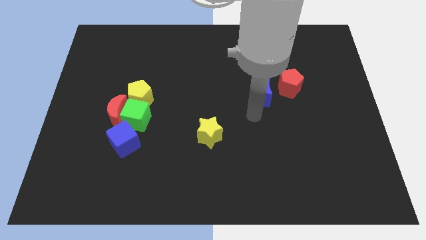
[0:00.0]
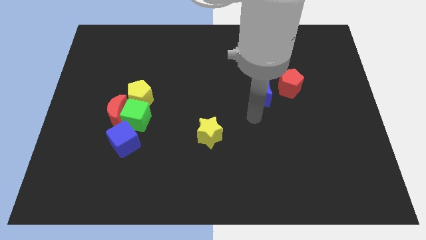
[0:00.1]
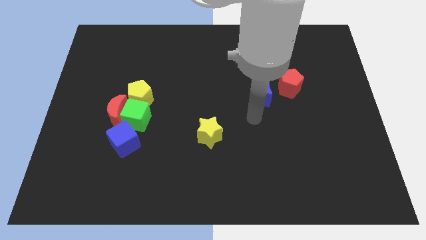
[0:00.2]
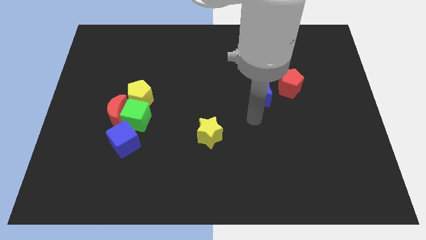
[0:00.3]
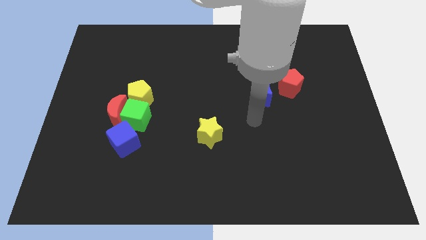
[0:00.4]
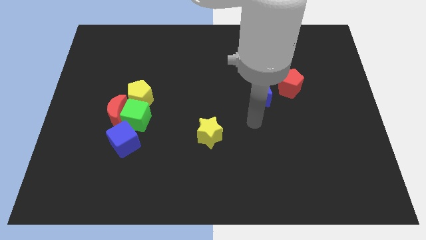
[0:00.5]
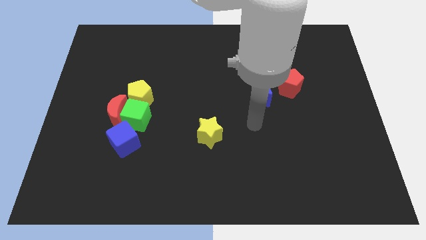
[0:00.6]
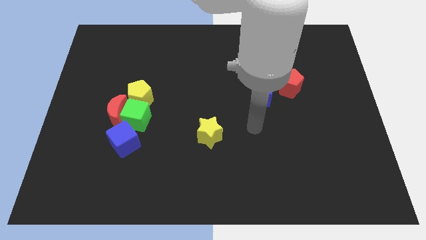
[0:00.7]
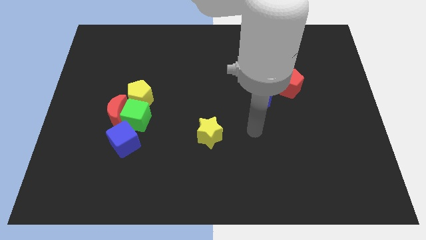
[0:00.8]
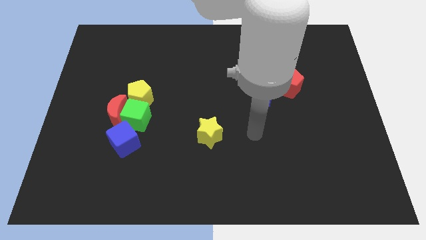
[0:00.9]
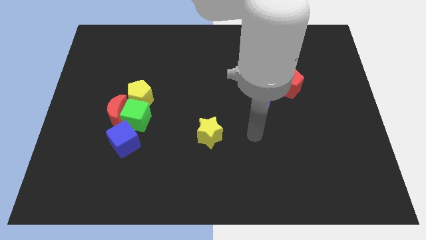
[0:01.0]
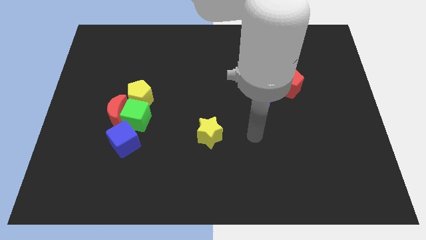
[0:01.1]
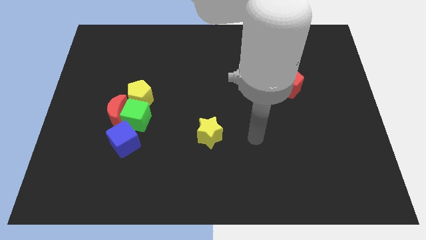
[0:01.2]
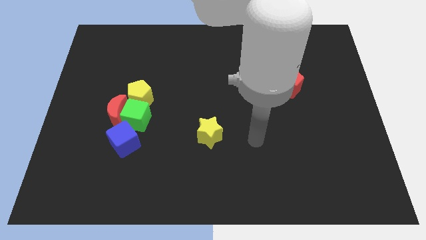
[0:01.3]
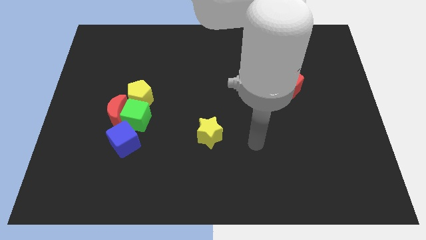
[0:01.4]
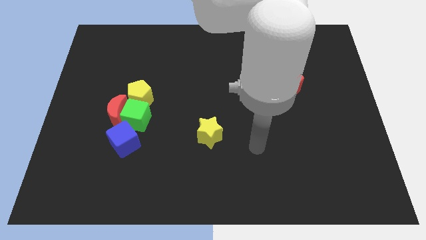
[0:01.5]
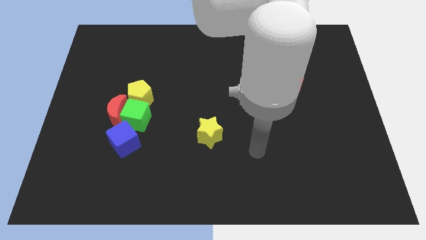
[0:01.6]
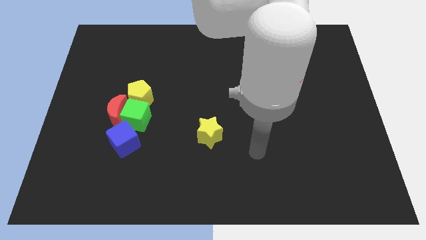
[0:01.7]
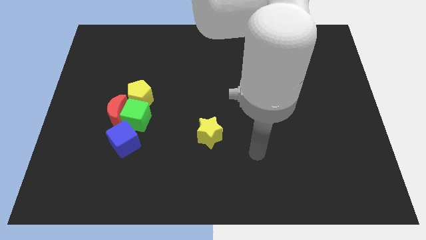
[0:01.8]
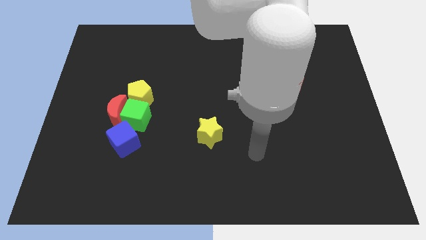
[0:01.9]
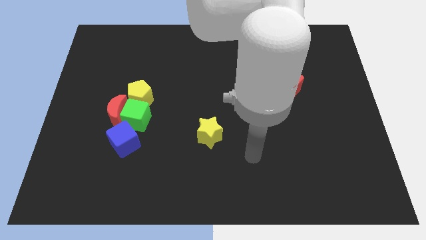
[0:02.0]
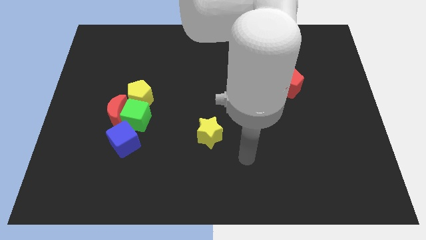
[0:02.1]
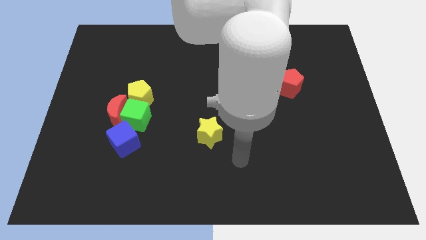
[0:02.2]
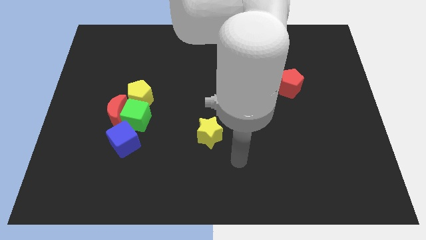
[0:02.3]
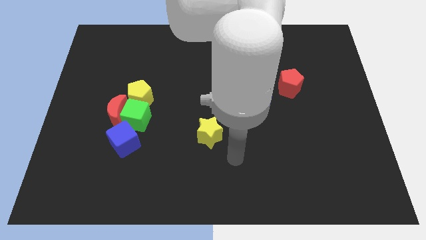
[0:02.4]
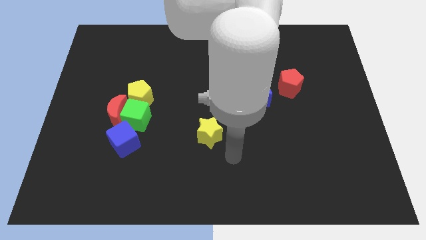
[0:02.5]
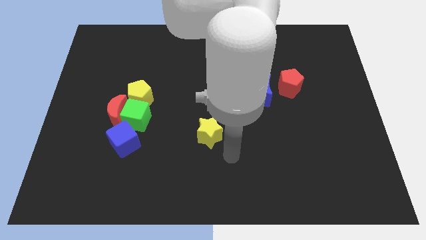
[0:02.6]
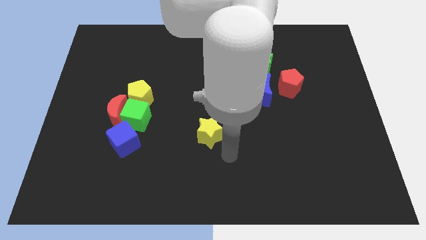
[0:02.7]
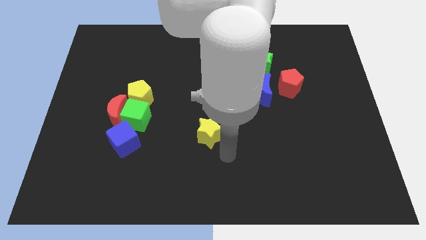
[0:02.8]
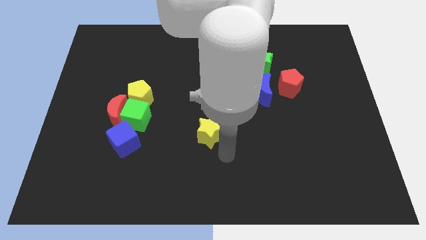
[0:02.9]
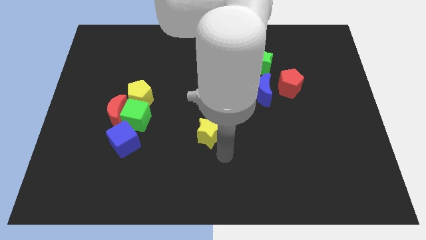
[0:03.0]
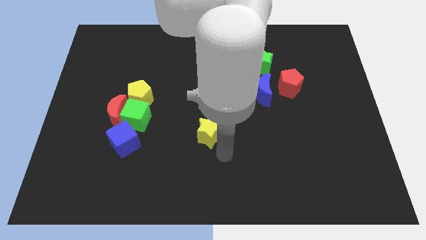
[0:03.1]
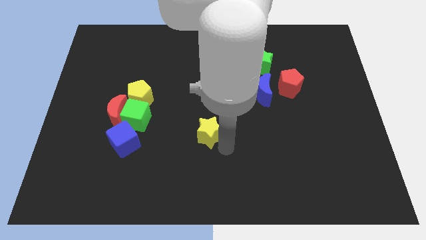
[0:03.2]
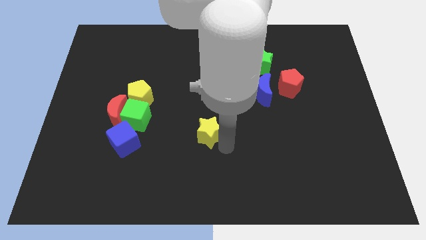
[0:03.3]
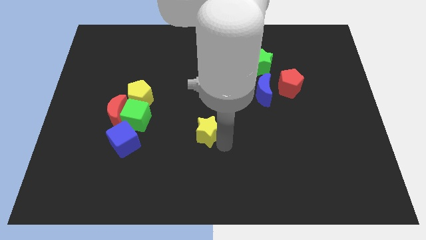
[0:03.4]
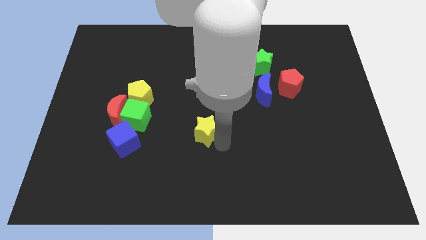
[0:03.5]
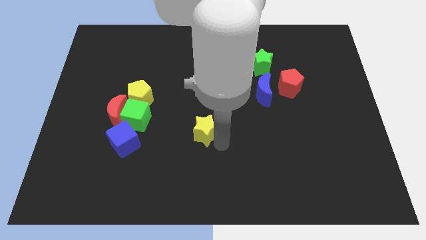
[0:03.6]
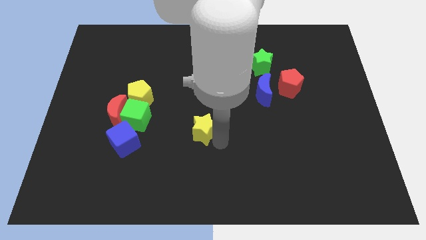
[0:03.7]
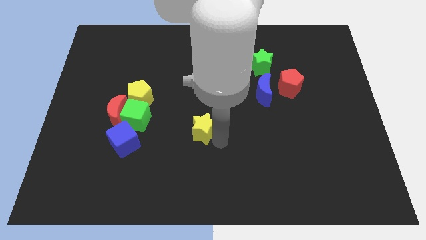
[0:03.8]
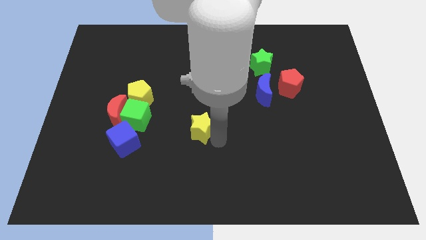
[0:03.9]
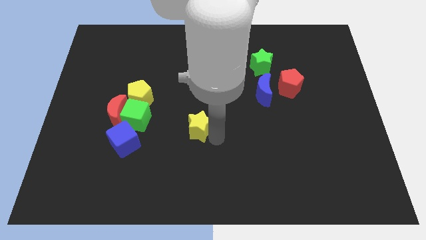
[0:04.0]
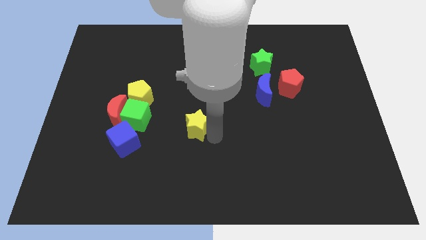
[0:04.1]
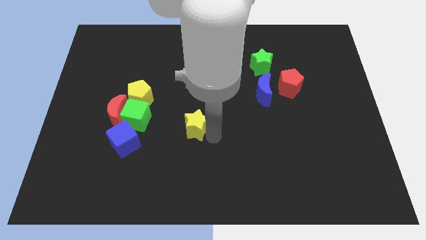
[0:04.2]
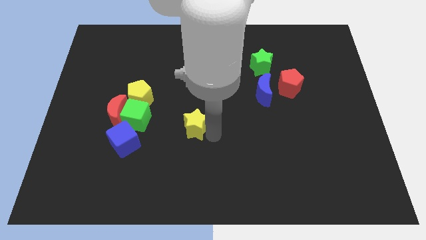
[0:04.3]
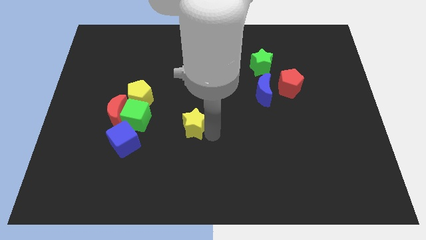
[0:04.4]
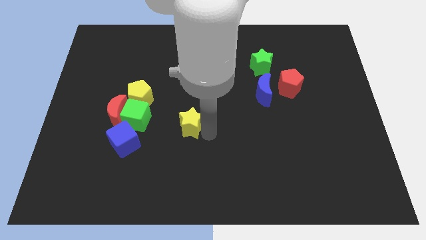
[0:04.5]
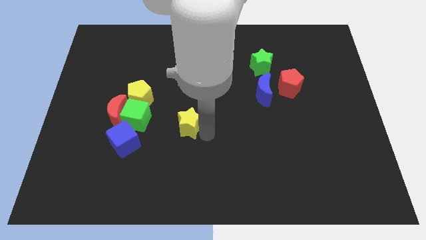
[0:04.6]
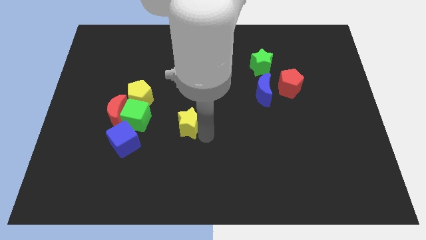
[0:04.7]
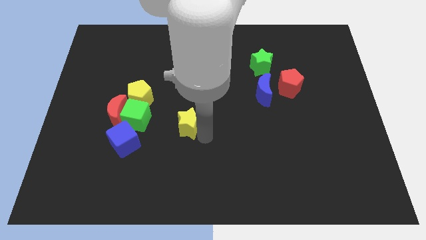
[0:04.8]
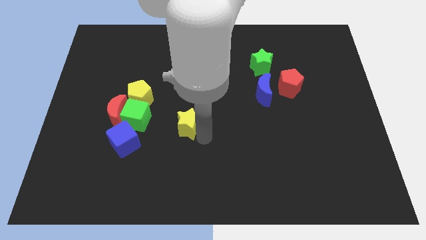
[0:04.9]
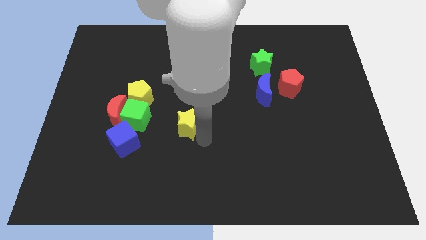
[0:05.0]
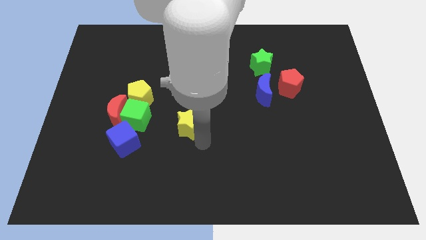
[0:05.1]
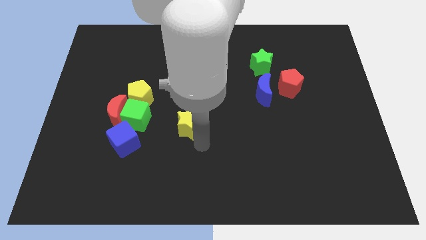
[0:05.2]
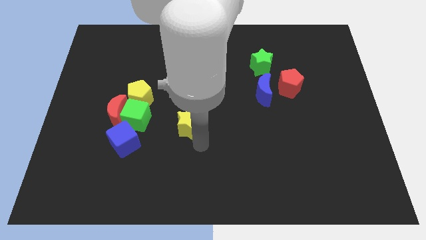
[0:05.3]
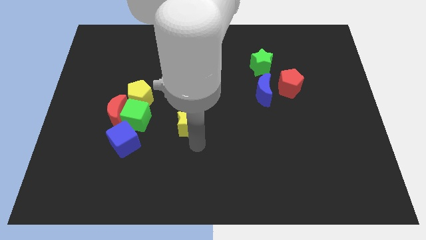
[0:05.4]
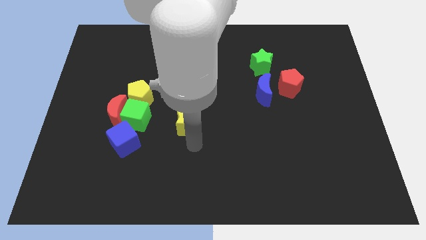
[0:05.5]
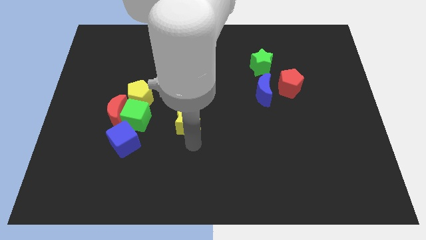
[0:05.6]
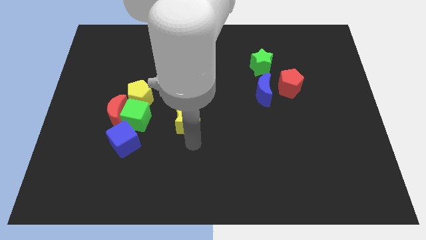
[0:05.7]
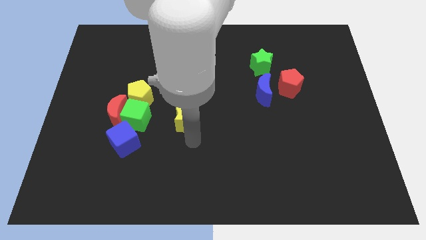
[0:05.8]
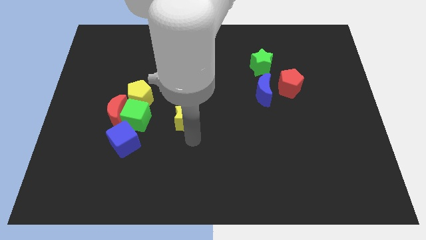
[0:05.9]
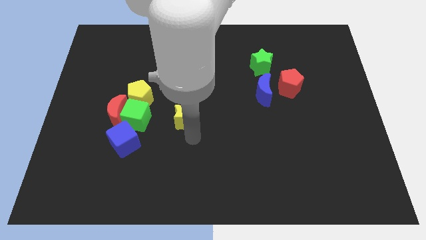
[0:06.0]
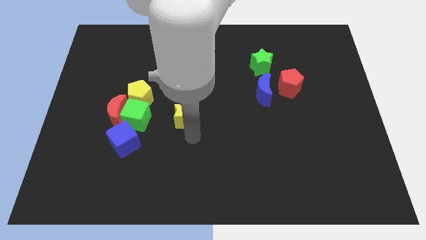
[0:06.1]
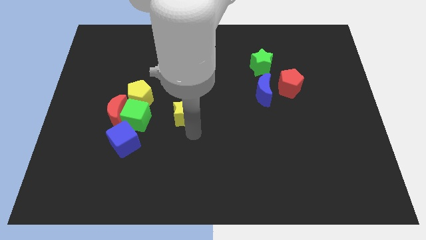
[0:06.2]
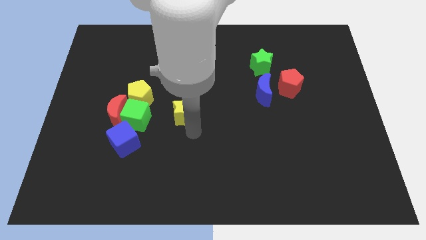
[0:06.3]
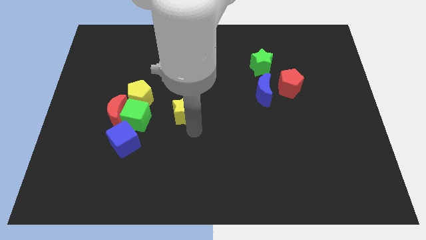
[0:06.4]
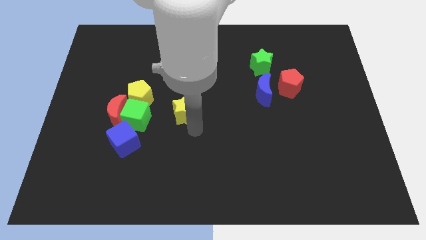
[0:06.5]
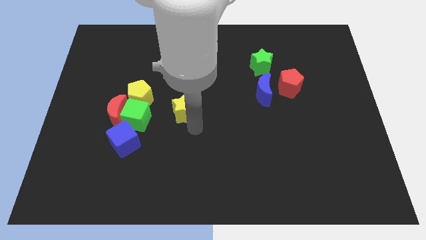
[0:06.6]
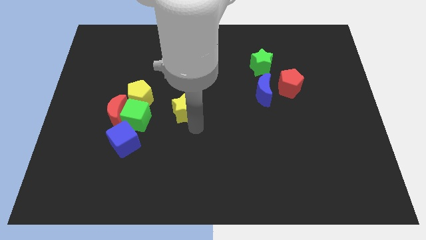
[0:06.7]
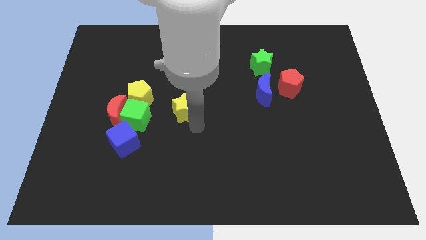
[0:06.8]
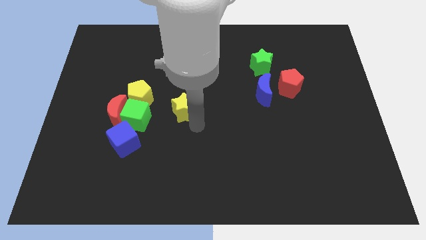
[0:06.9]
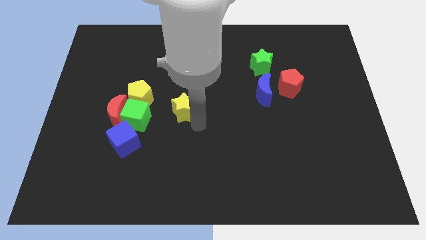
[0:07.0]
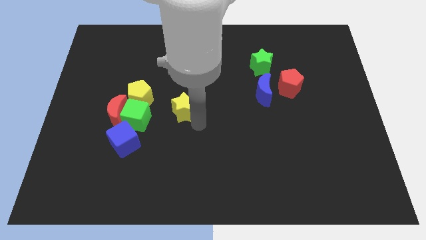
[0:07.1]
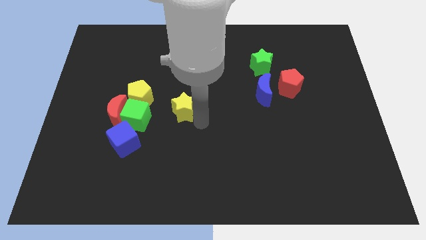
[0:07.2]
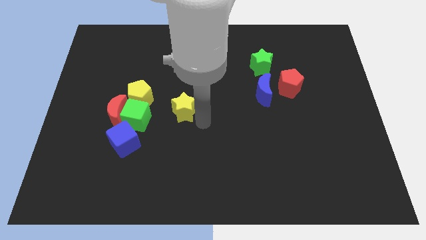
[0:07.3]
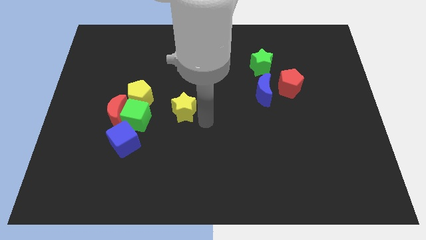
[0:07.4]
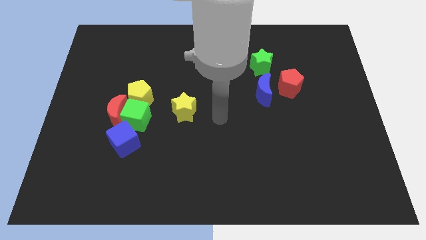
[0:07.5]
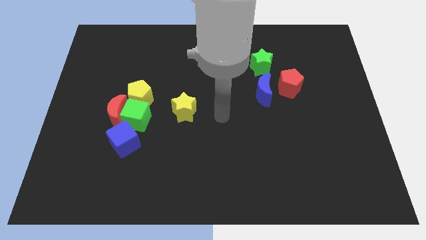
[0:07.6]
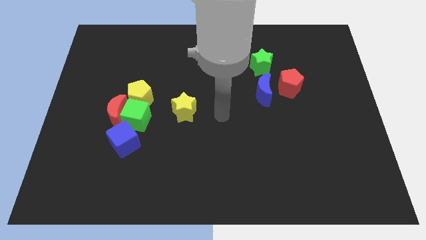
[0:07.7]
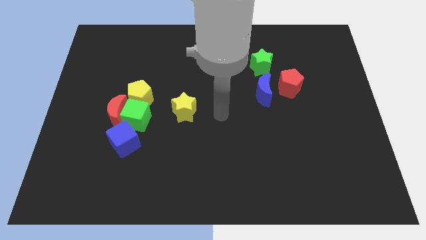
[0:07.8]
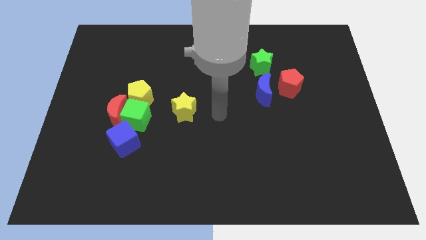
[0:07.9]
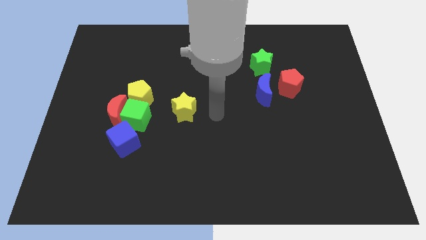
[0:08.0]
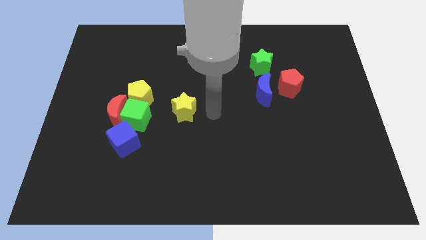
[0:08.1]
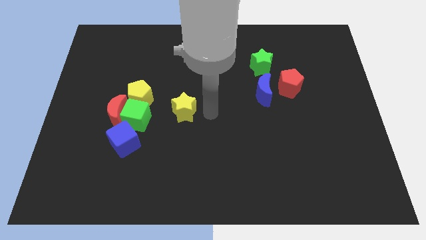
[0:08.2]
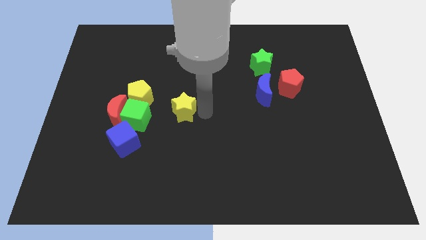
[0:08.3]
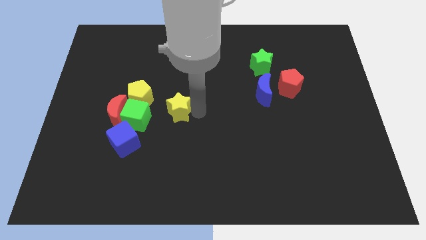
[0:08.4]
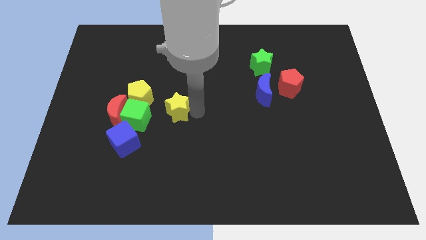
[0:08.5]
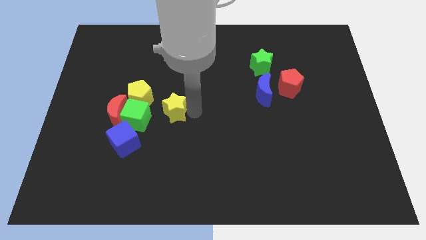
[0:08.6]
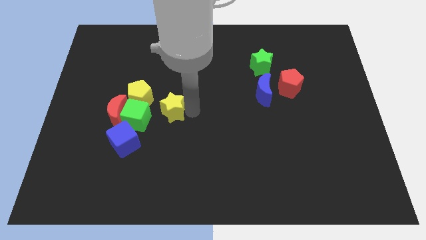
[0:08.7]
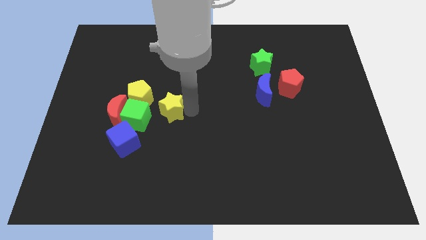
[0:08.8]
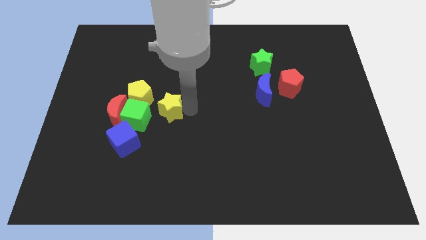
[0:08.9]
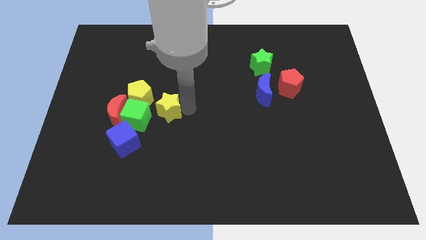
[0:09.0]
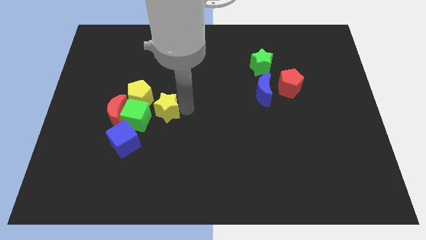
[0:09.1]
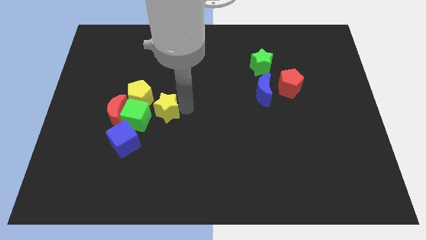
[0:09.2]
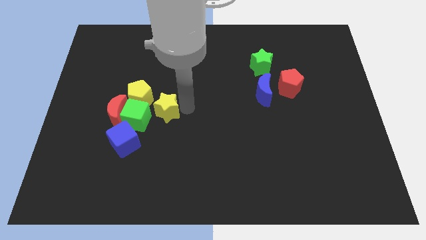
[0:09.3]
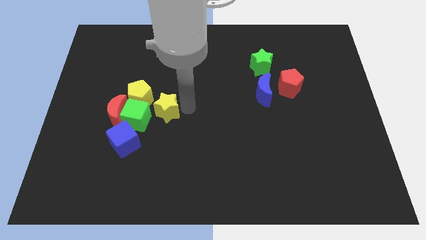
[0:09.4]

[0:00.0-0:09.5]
place the yellow star to the right of the yellow pentagon
